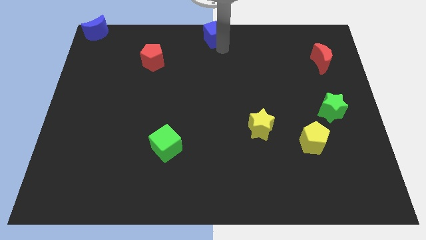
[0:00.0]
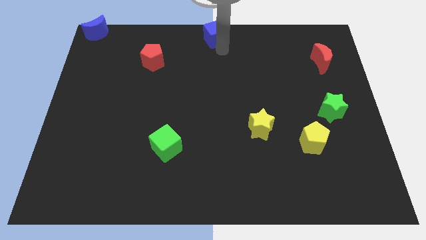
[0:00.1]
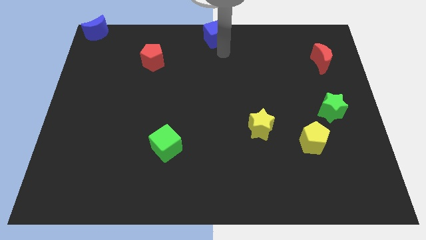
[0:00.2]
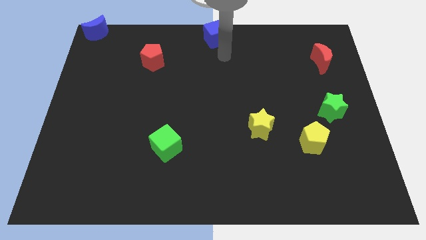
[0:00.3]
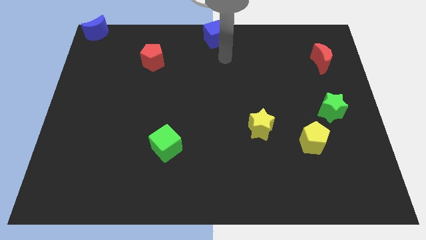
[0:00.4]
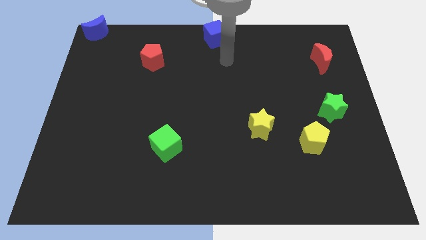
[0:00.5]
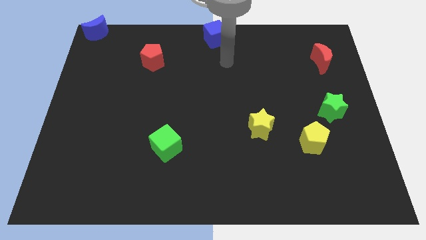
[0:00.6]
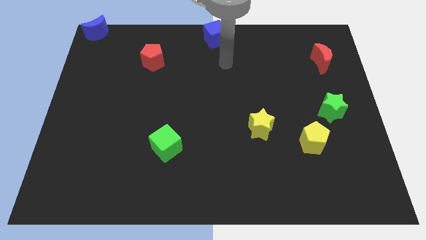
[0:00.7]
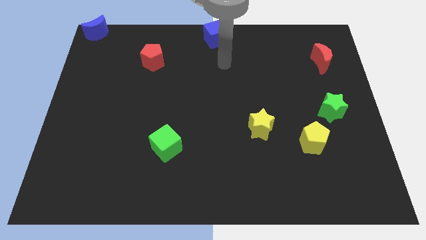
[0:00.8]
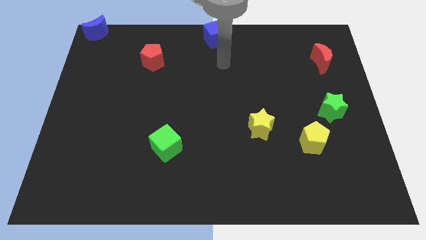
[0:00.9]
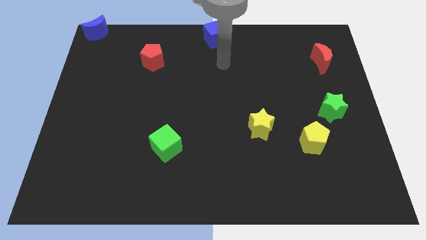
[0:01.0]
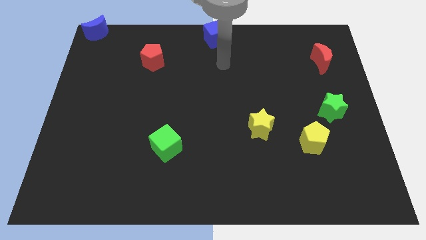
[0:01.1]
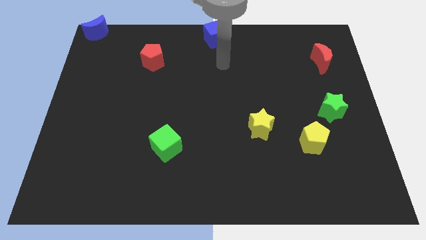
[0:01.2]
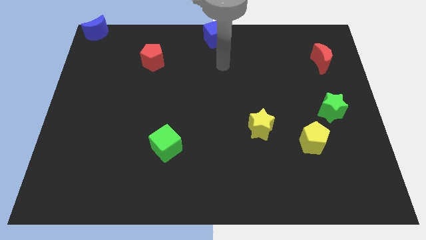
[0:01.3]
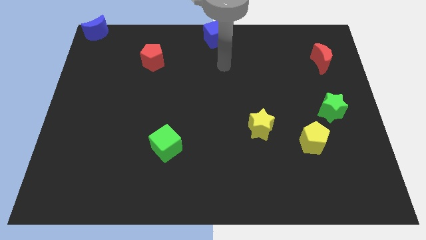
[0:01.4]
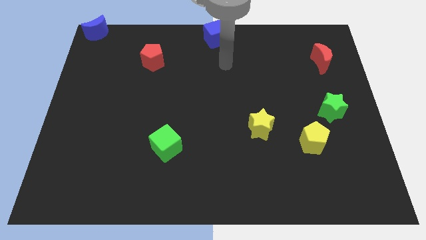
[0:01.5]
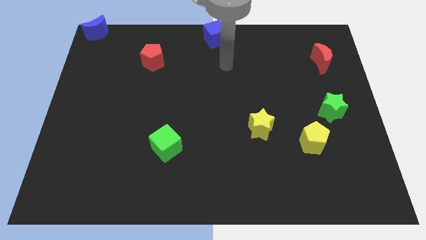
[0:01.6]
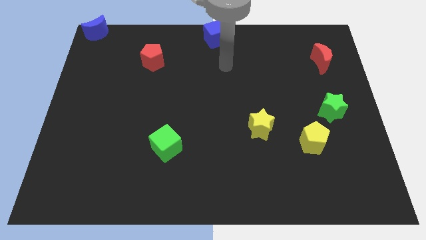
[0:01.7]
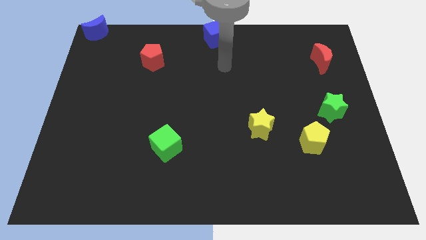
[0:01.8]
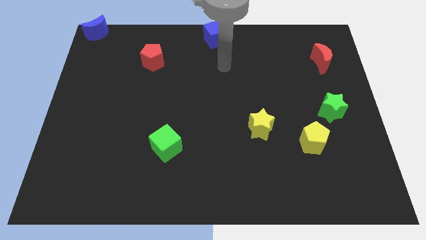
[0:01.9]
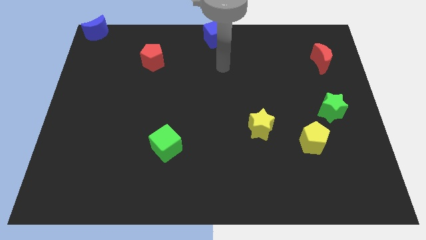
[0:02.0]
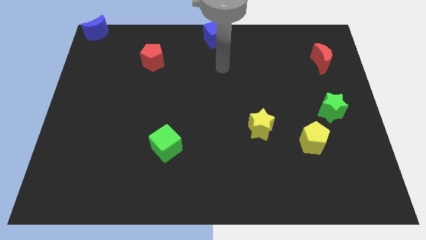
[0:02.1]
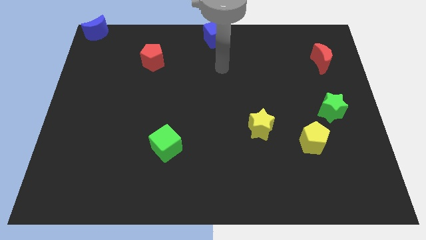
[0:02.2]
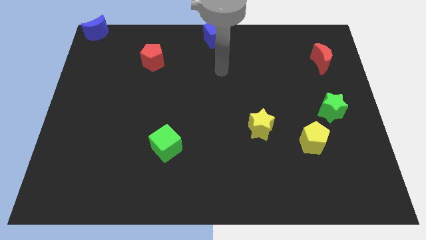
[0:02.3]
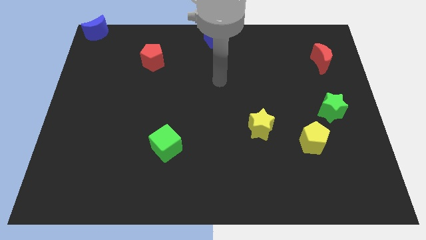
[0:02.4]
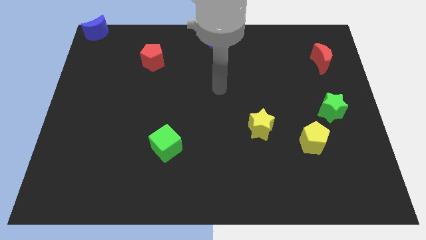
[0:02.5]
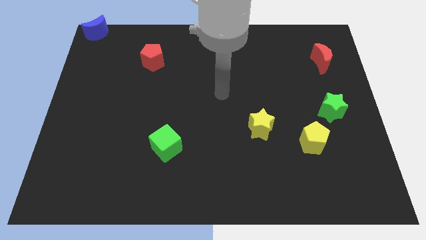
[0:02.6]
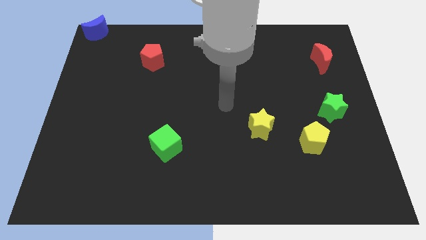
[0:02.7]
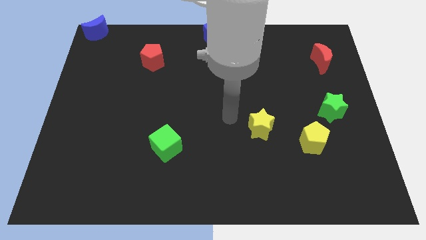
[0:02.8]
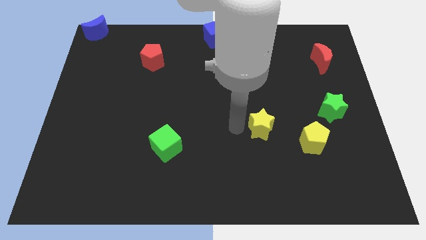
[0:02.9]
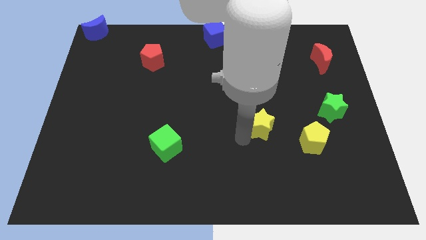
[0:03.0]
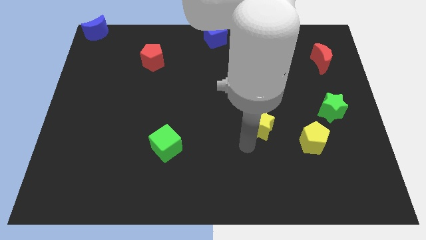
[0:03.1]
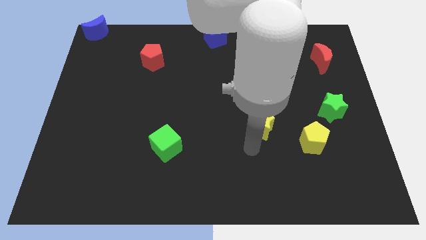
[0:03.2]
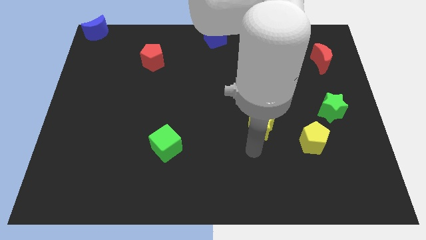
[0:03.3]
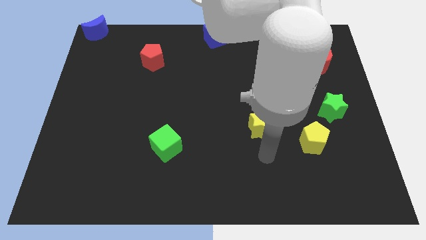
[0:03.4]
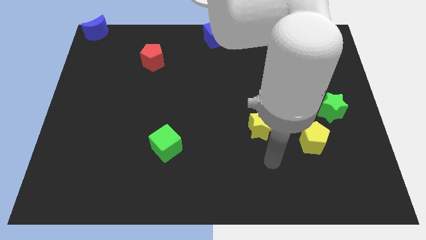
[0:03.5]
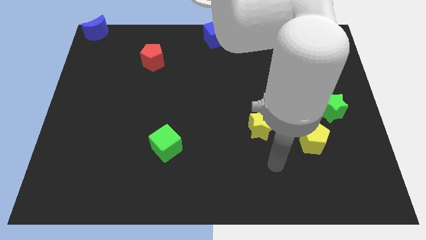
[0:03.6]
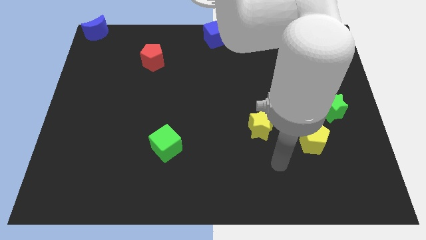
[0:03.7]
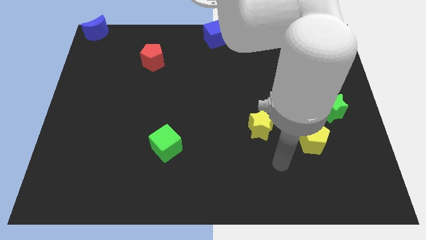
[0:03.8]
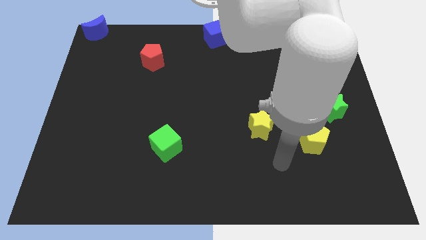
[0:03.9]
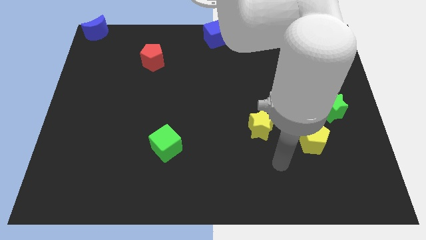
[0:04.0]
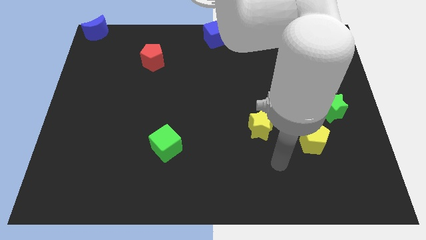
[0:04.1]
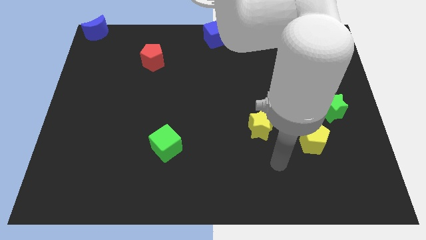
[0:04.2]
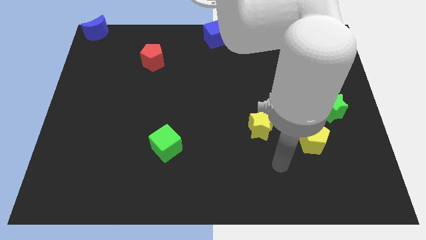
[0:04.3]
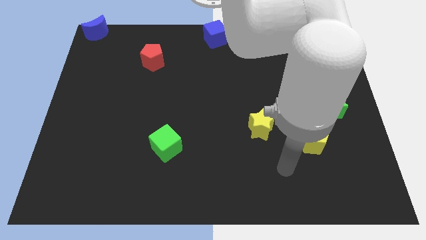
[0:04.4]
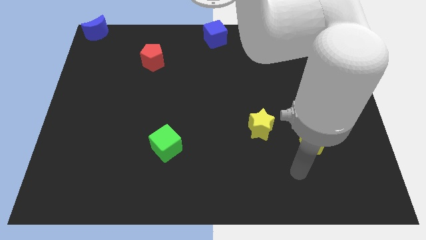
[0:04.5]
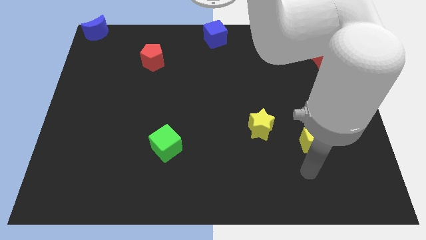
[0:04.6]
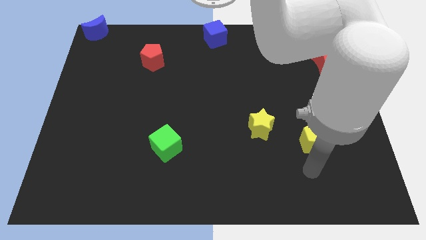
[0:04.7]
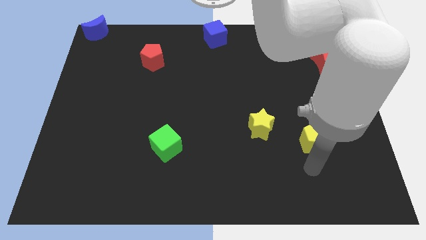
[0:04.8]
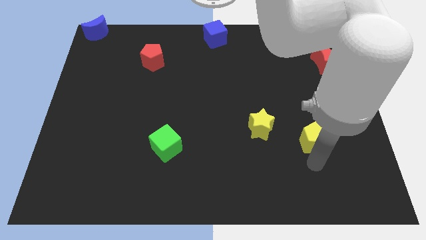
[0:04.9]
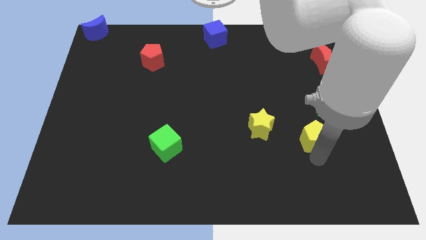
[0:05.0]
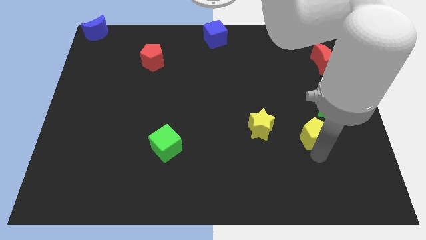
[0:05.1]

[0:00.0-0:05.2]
touch the bottom side of the yellow pentagon

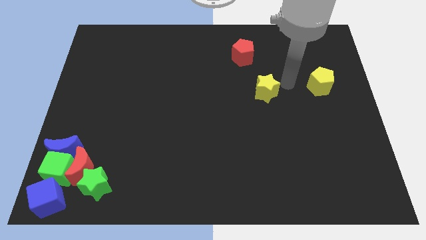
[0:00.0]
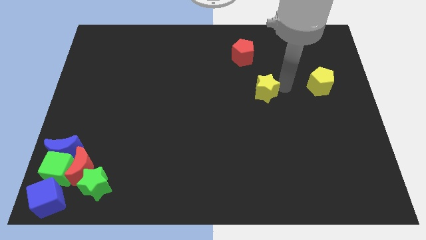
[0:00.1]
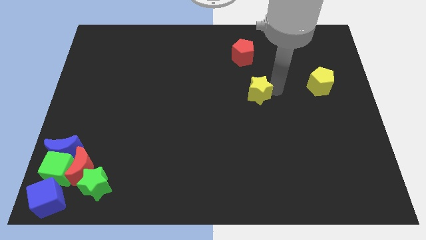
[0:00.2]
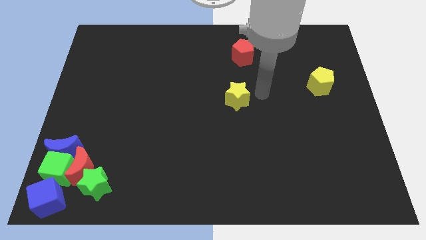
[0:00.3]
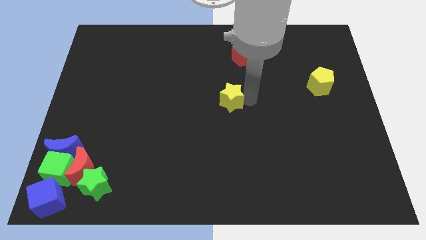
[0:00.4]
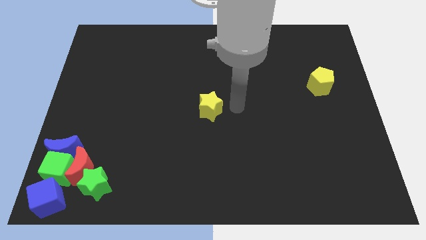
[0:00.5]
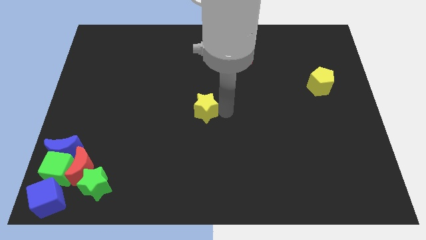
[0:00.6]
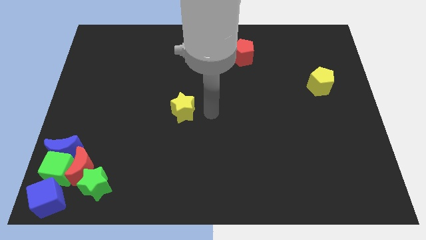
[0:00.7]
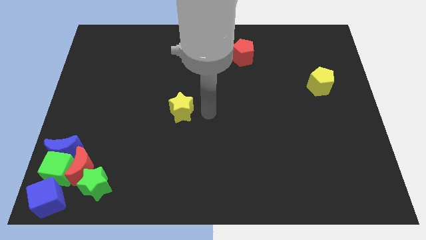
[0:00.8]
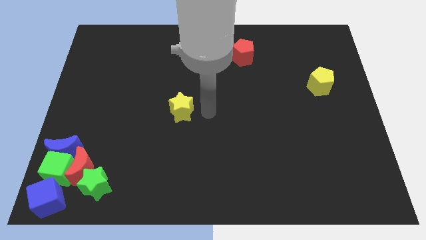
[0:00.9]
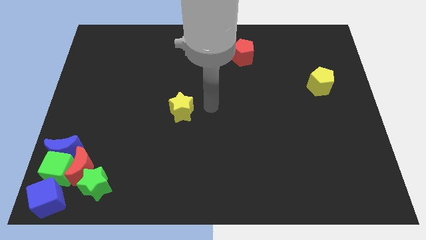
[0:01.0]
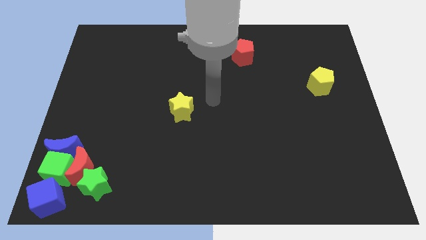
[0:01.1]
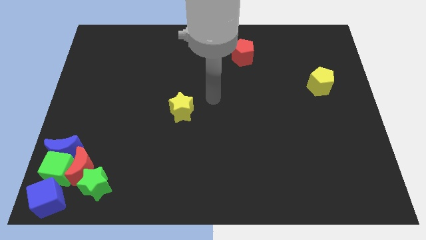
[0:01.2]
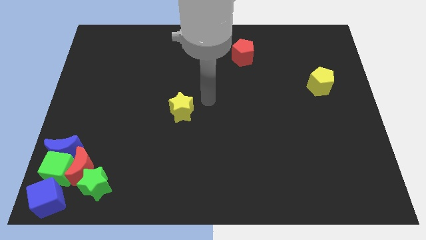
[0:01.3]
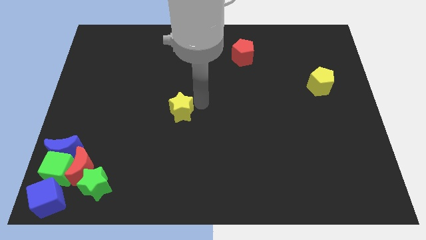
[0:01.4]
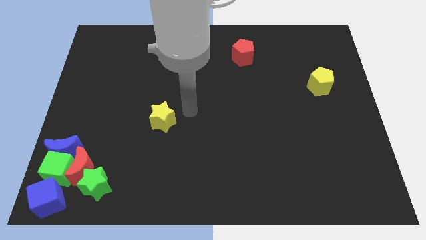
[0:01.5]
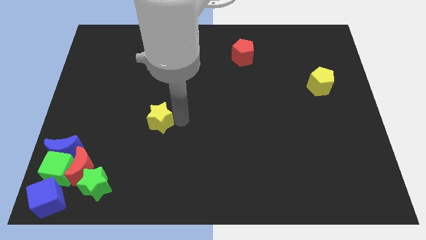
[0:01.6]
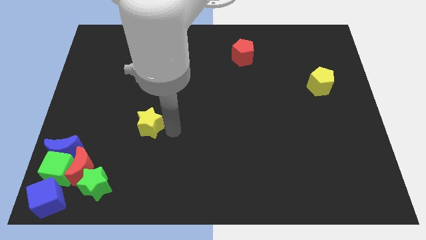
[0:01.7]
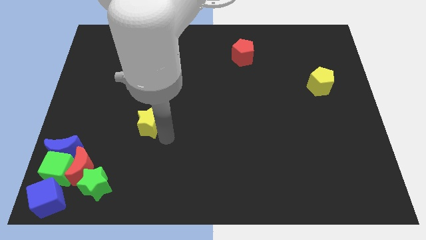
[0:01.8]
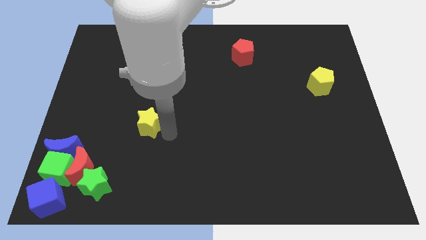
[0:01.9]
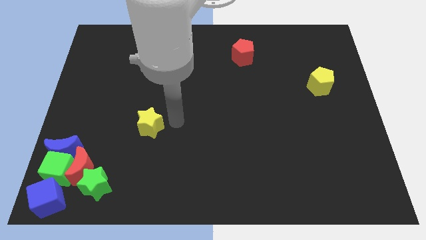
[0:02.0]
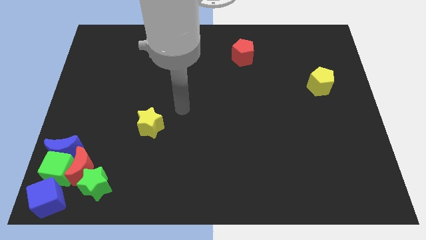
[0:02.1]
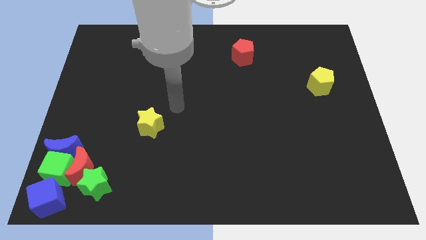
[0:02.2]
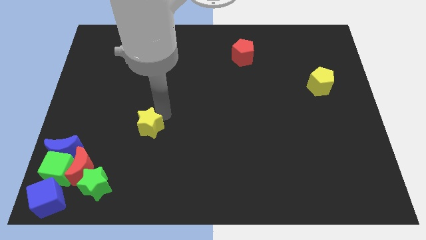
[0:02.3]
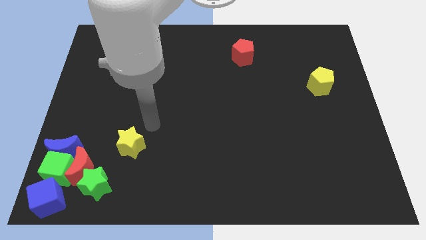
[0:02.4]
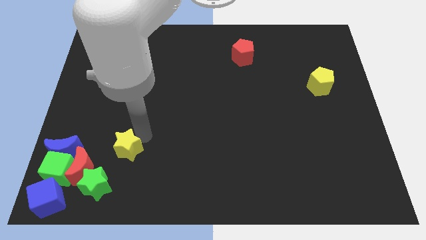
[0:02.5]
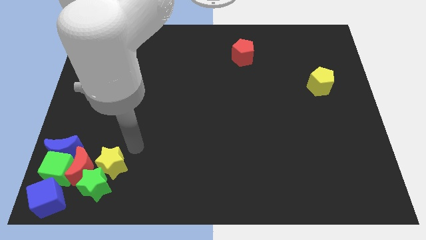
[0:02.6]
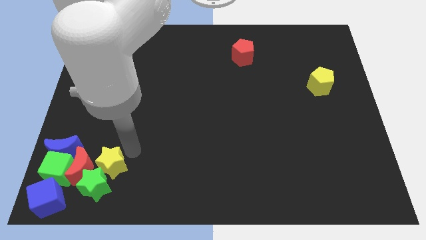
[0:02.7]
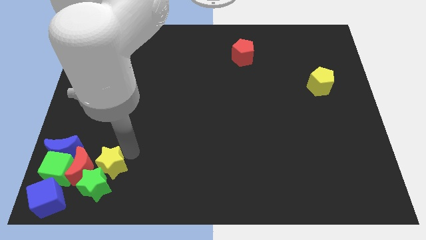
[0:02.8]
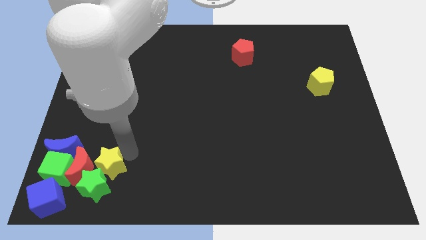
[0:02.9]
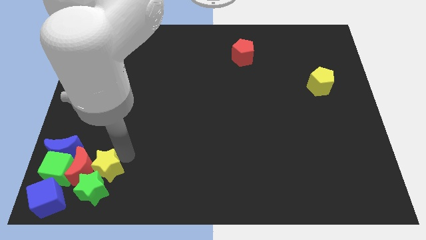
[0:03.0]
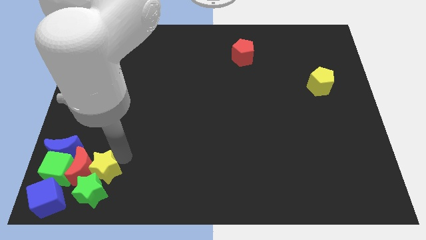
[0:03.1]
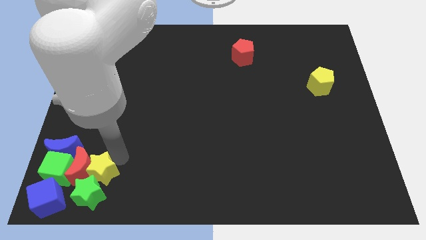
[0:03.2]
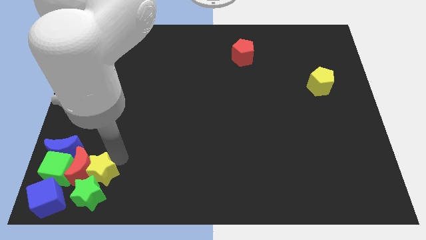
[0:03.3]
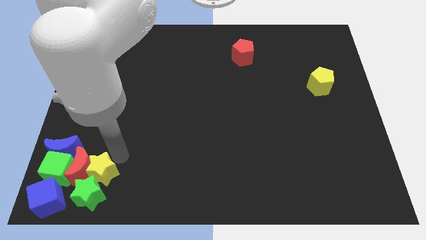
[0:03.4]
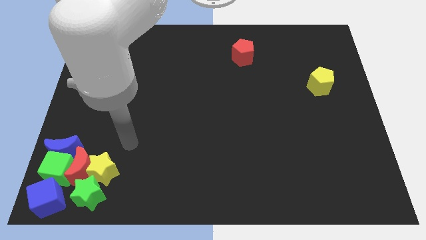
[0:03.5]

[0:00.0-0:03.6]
slide yellow star to the top of the green star
